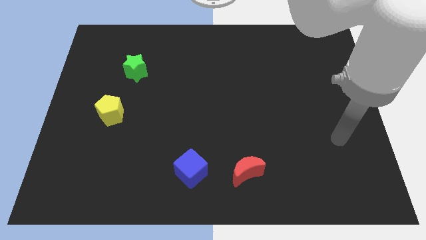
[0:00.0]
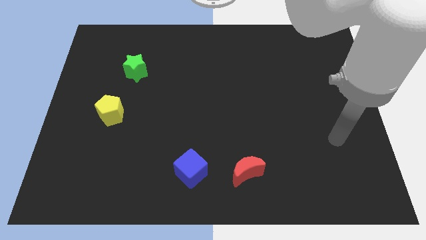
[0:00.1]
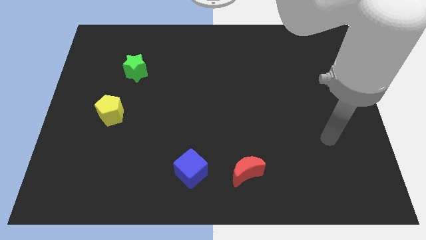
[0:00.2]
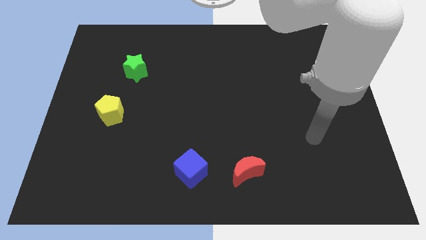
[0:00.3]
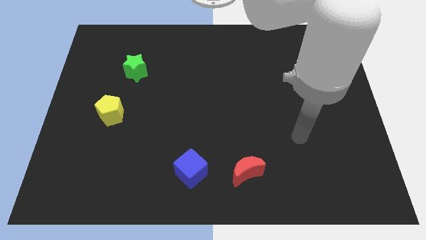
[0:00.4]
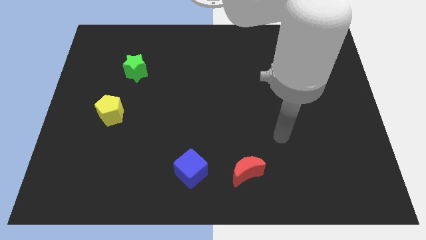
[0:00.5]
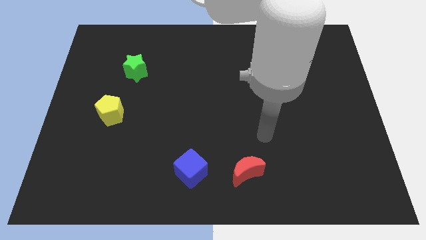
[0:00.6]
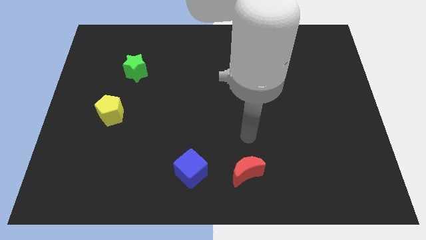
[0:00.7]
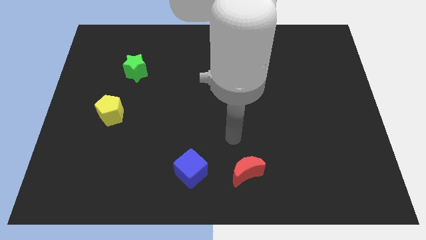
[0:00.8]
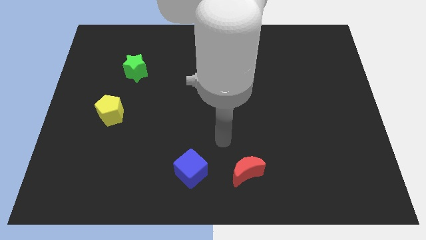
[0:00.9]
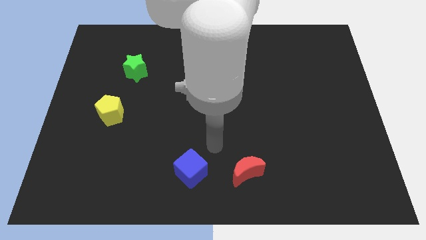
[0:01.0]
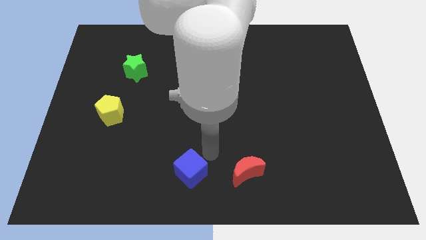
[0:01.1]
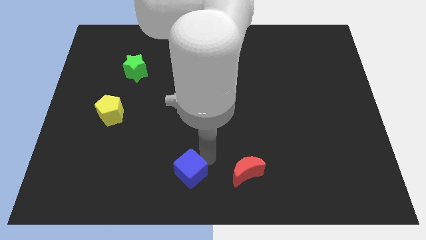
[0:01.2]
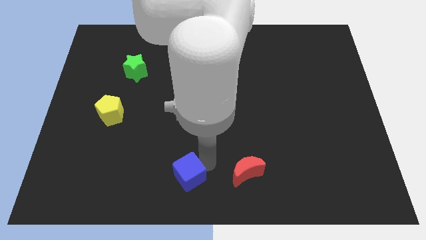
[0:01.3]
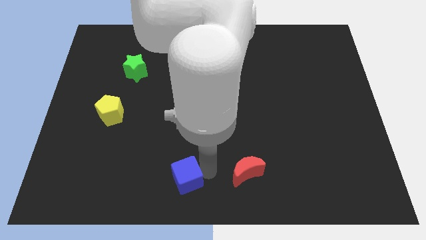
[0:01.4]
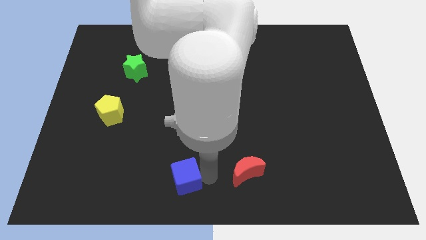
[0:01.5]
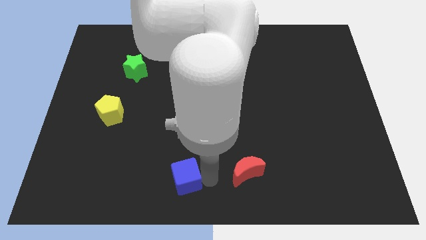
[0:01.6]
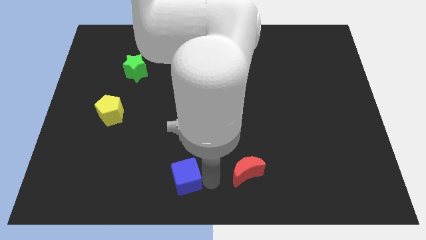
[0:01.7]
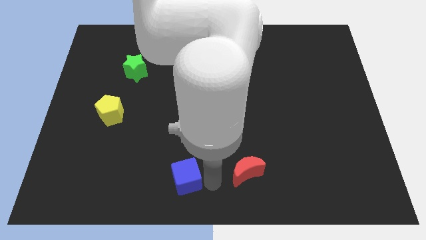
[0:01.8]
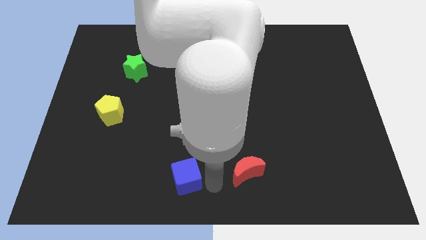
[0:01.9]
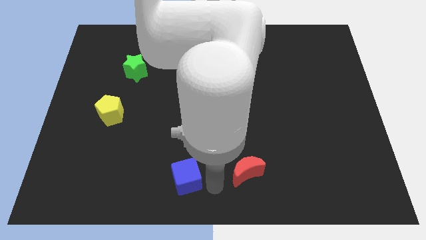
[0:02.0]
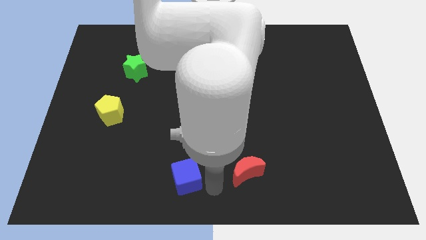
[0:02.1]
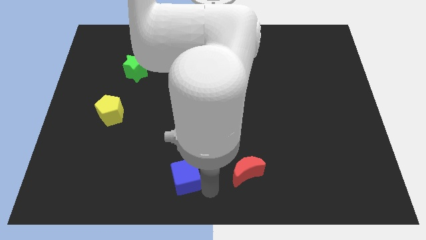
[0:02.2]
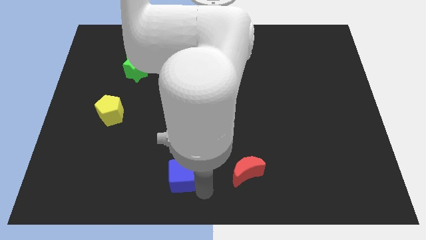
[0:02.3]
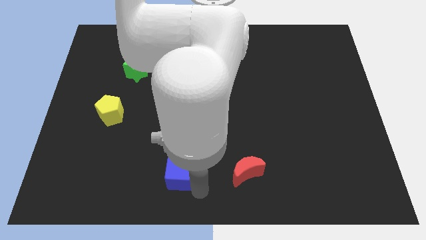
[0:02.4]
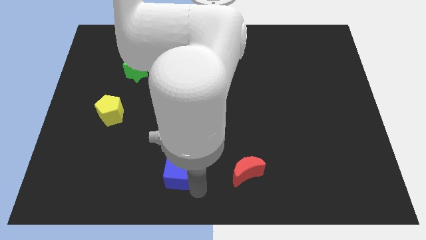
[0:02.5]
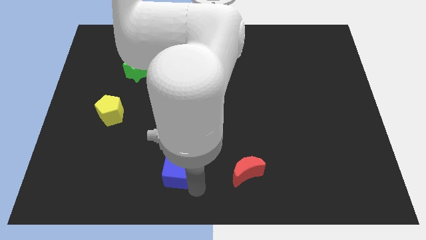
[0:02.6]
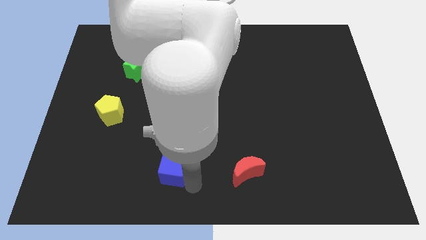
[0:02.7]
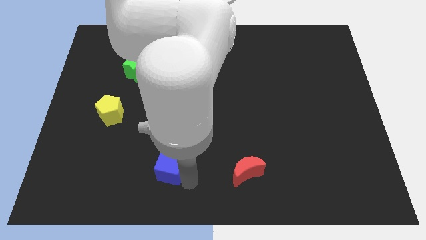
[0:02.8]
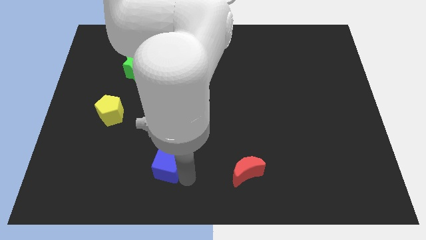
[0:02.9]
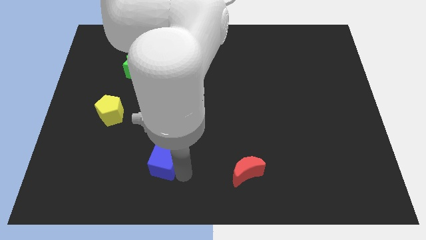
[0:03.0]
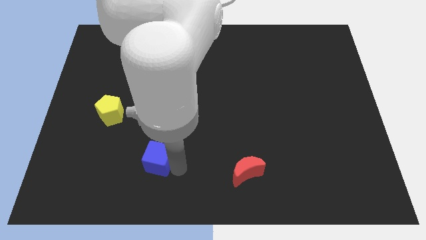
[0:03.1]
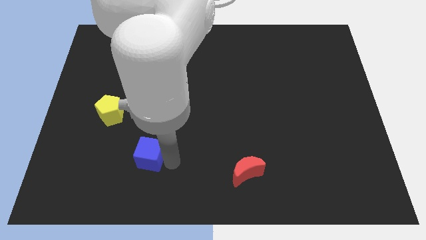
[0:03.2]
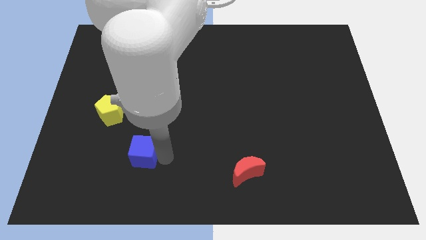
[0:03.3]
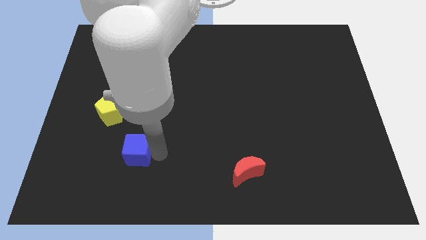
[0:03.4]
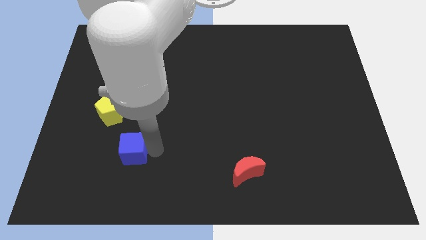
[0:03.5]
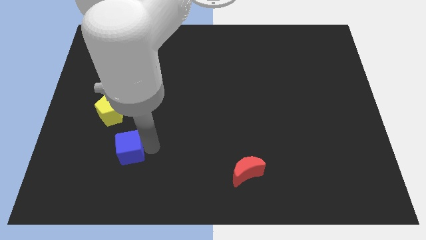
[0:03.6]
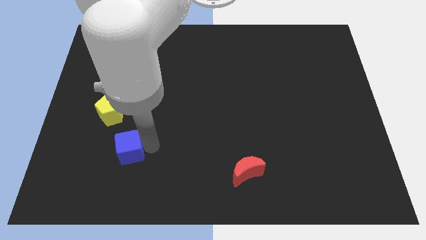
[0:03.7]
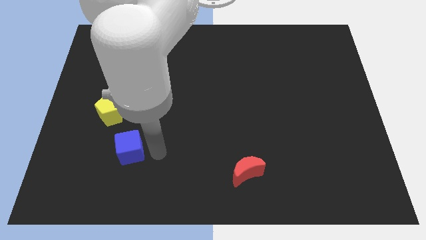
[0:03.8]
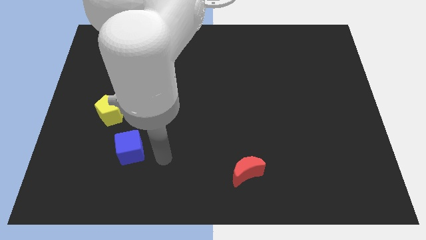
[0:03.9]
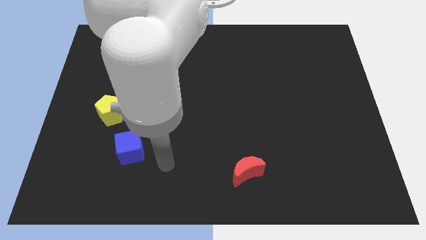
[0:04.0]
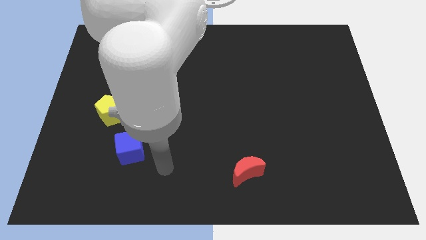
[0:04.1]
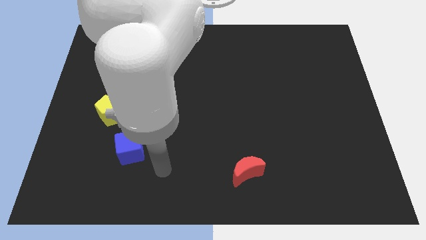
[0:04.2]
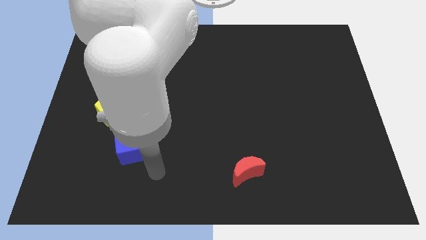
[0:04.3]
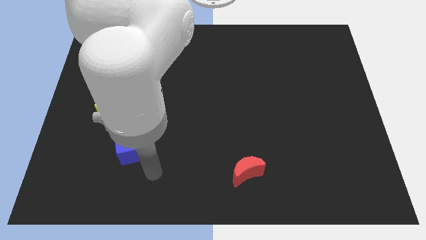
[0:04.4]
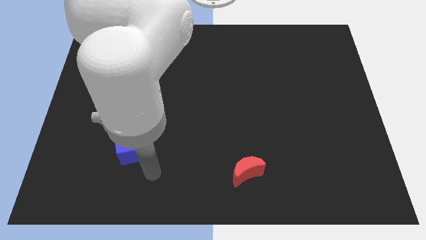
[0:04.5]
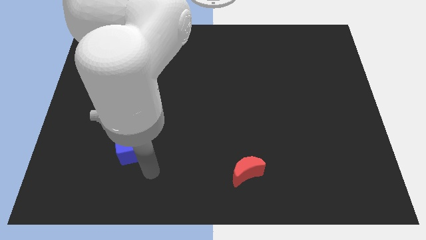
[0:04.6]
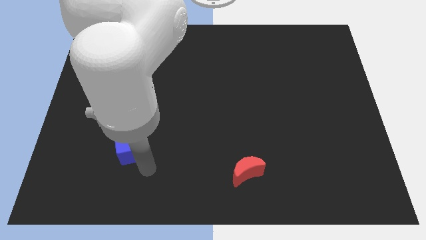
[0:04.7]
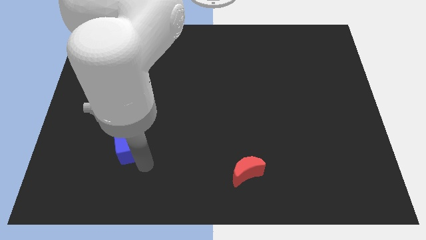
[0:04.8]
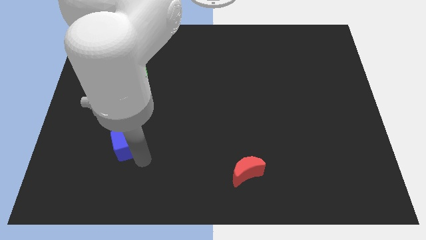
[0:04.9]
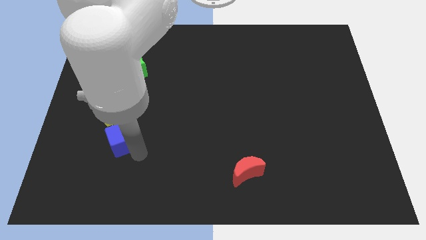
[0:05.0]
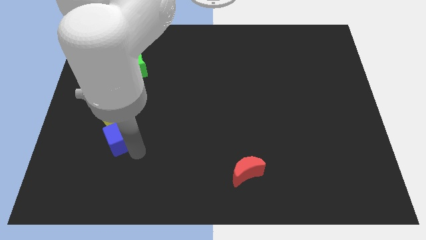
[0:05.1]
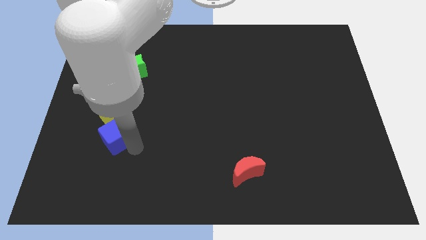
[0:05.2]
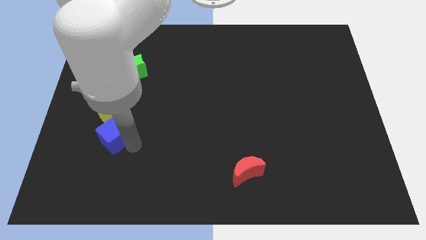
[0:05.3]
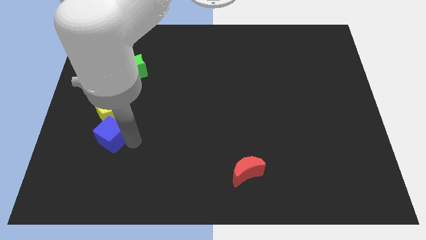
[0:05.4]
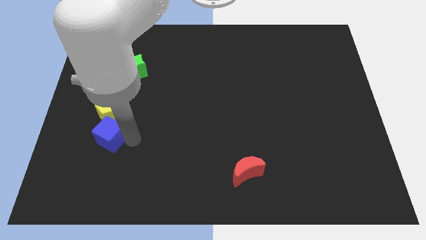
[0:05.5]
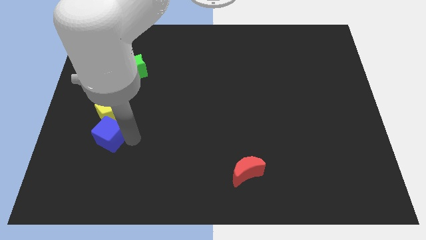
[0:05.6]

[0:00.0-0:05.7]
move the cube towards the yellow pentagon

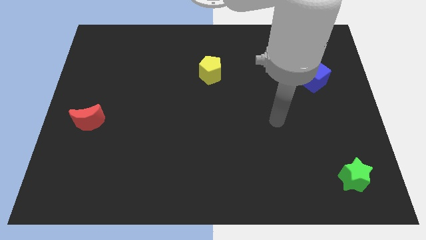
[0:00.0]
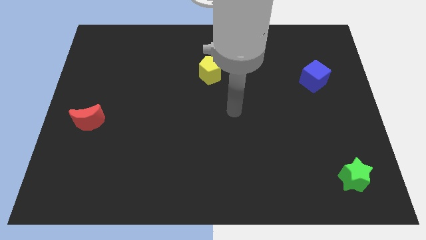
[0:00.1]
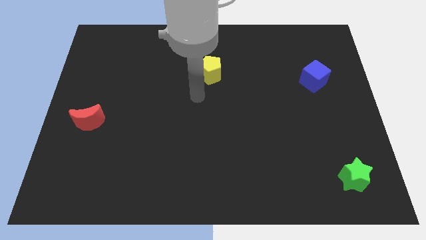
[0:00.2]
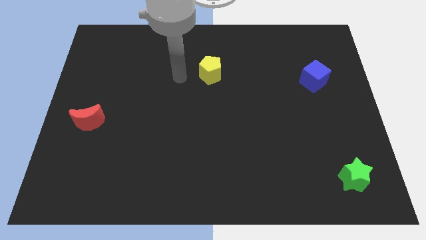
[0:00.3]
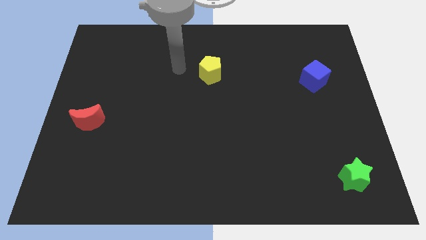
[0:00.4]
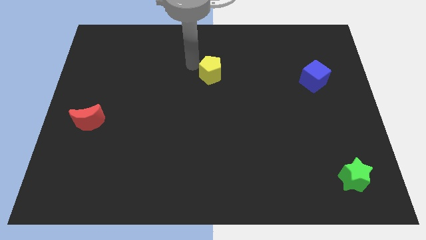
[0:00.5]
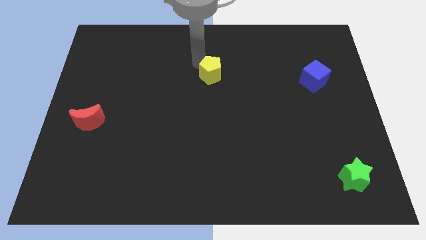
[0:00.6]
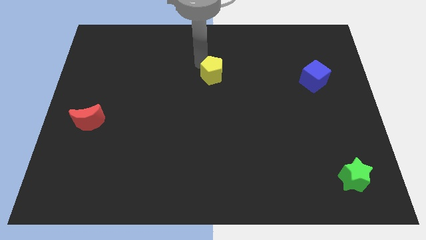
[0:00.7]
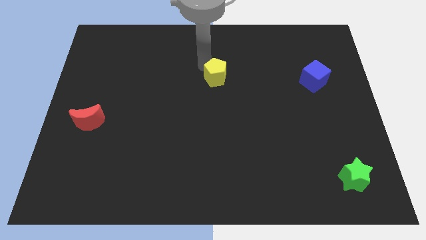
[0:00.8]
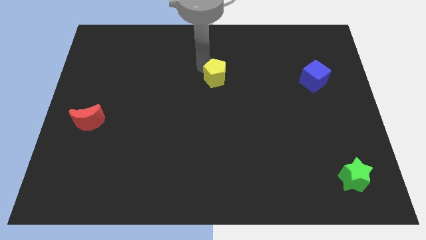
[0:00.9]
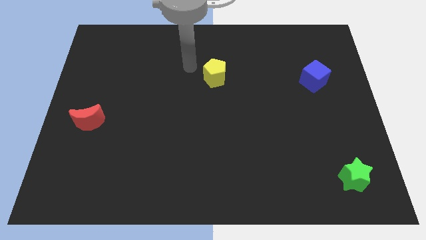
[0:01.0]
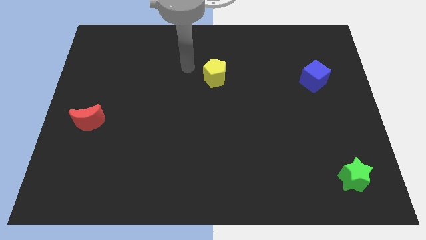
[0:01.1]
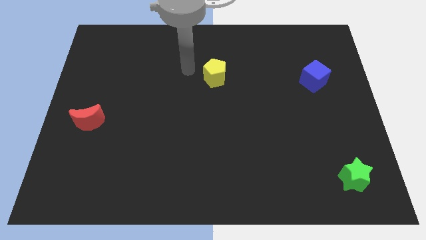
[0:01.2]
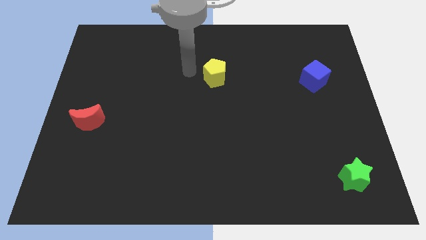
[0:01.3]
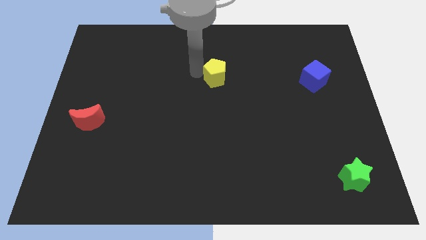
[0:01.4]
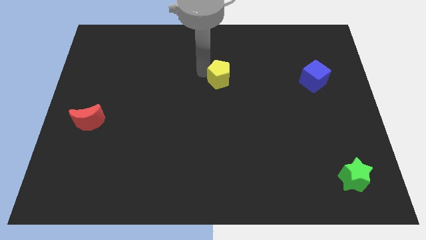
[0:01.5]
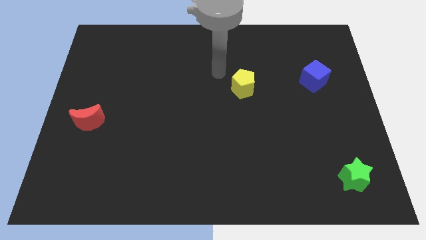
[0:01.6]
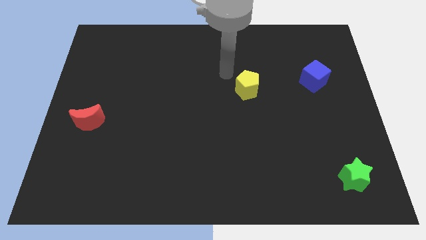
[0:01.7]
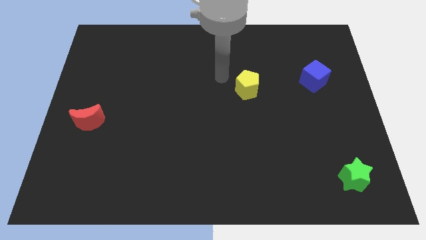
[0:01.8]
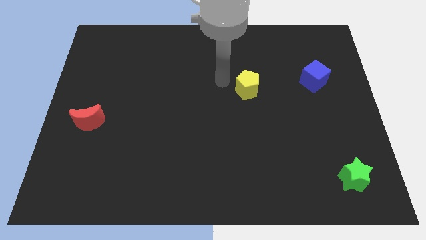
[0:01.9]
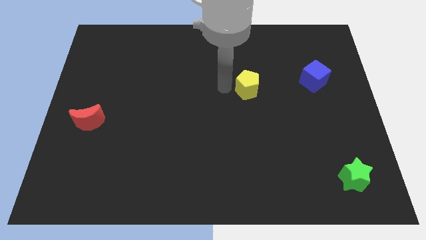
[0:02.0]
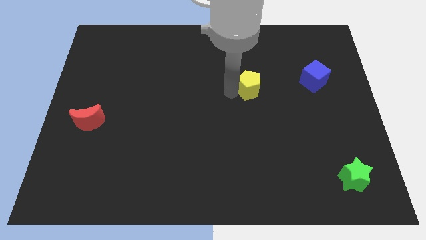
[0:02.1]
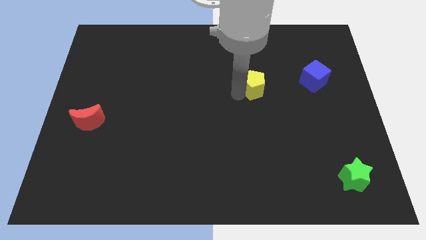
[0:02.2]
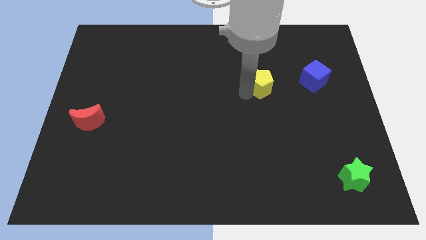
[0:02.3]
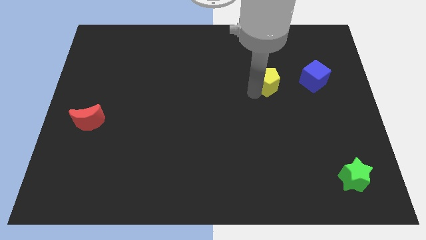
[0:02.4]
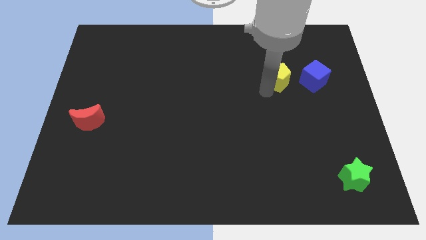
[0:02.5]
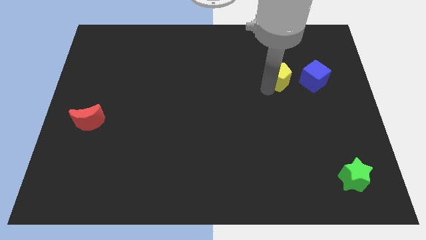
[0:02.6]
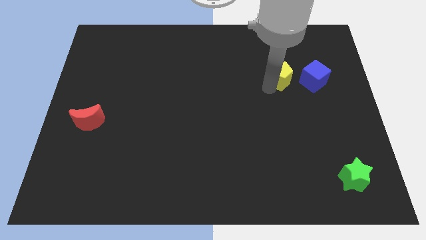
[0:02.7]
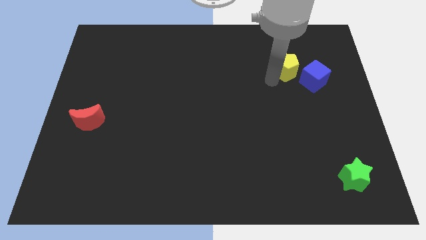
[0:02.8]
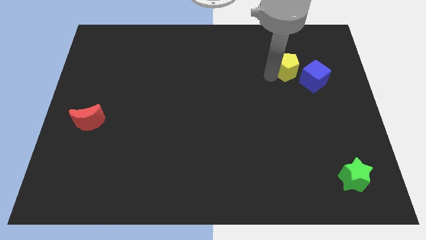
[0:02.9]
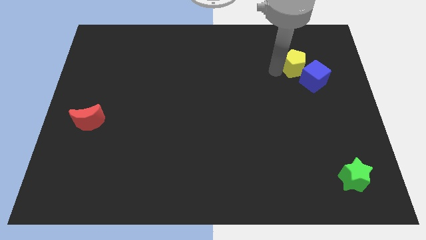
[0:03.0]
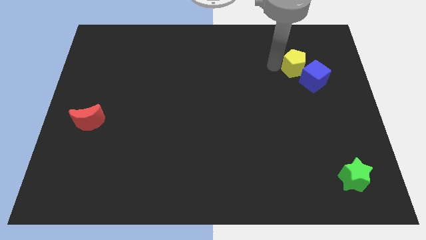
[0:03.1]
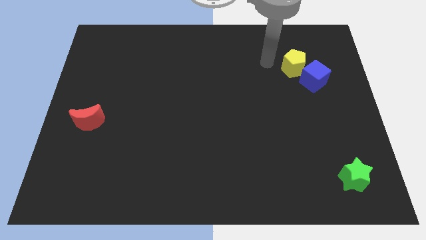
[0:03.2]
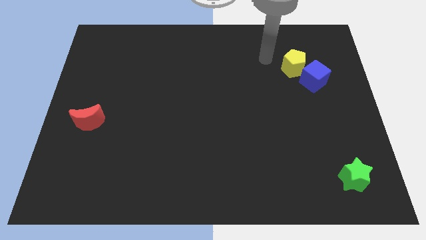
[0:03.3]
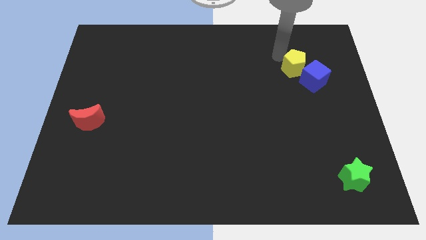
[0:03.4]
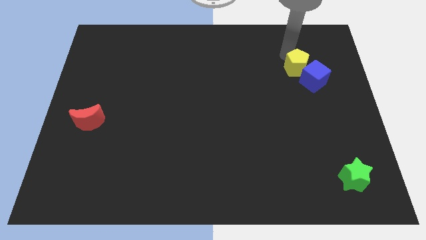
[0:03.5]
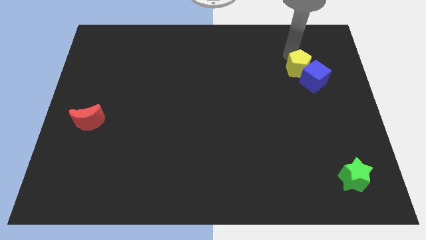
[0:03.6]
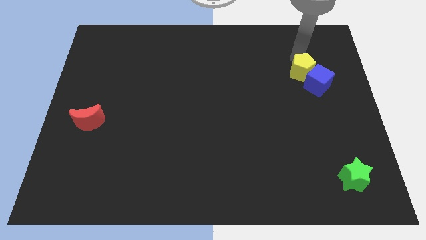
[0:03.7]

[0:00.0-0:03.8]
move the yellow block close to the cube
